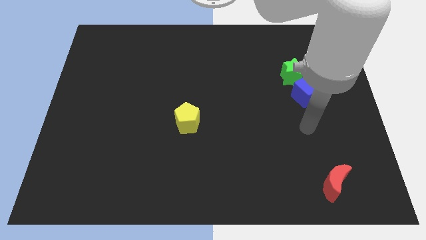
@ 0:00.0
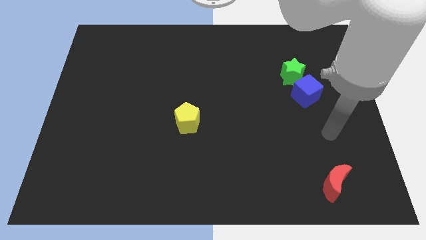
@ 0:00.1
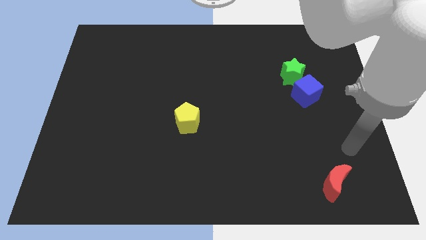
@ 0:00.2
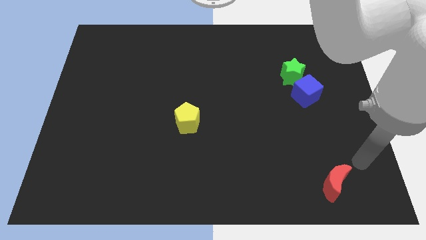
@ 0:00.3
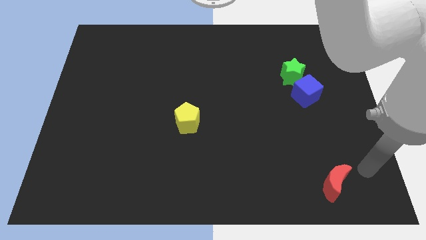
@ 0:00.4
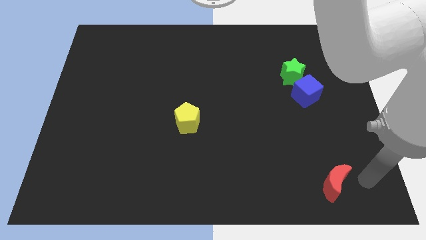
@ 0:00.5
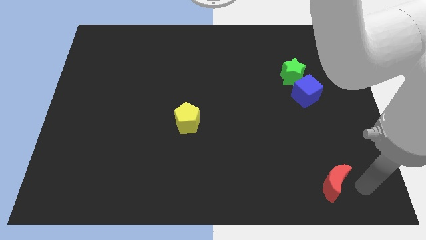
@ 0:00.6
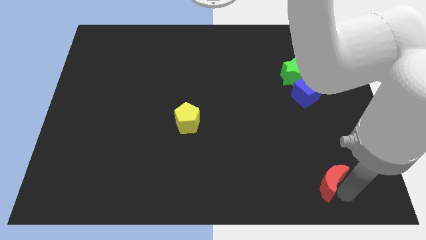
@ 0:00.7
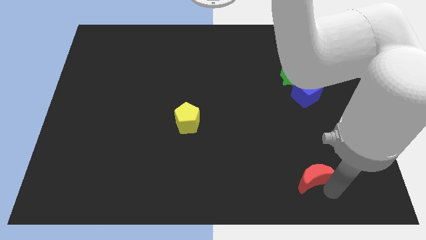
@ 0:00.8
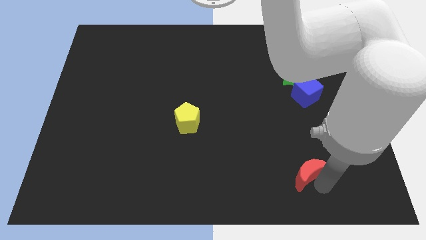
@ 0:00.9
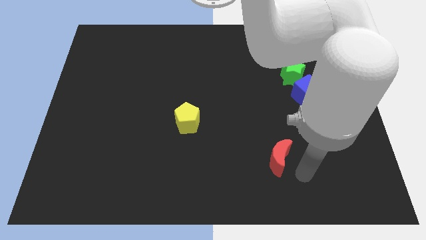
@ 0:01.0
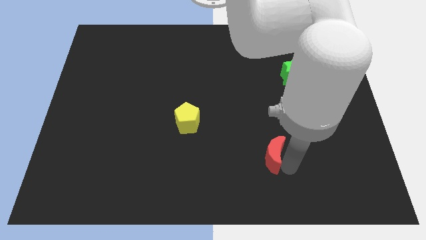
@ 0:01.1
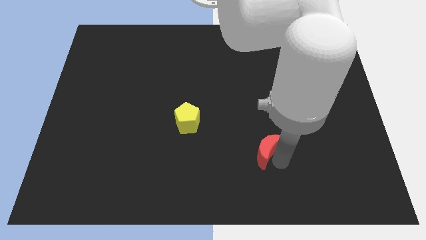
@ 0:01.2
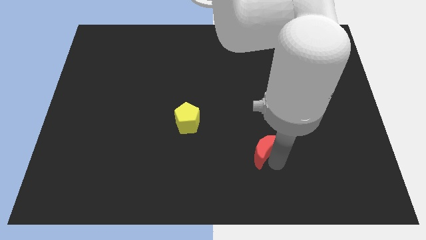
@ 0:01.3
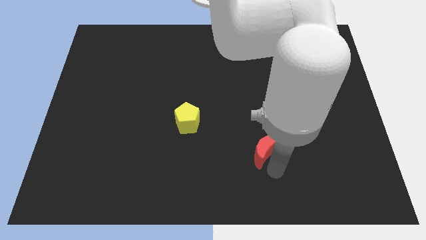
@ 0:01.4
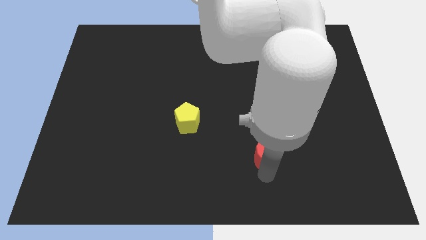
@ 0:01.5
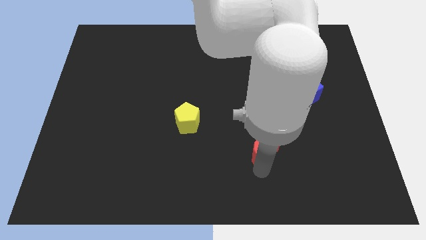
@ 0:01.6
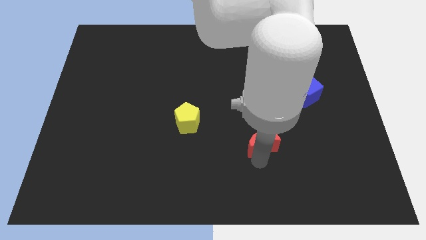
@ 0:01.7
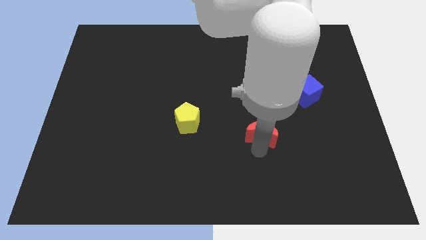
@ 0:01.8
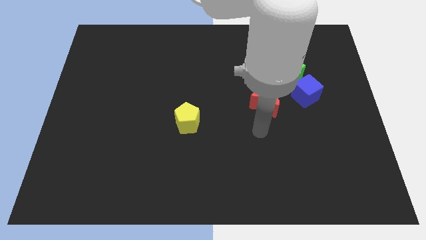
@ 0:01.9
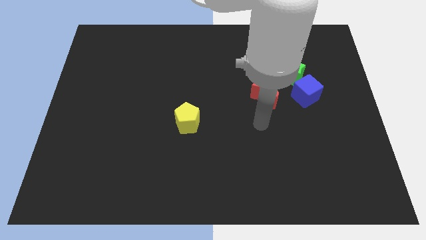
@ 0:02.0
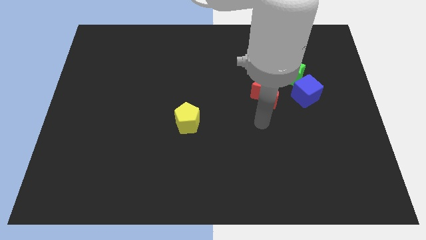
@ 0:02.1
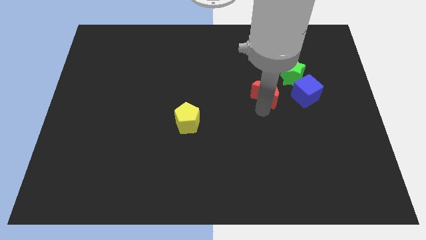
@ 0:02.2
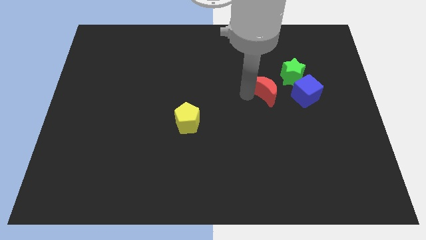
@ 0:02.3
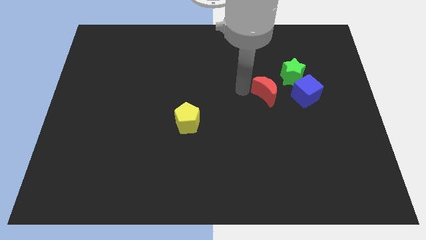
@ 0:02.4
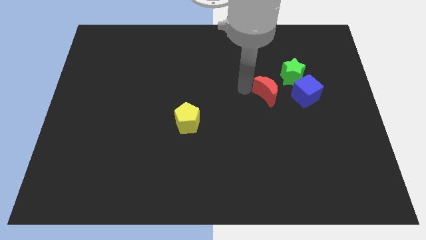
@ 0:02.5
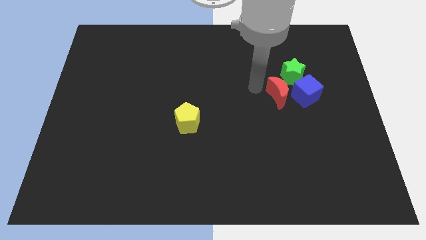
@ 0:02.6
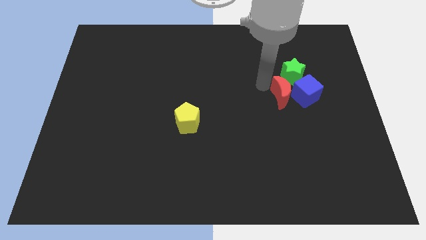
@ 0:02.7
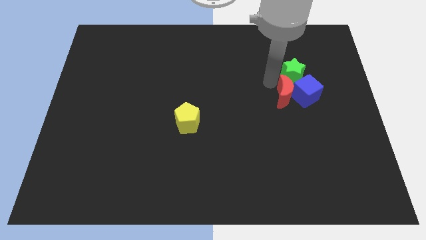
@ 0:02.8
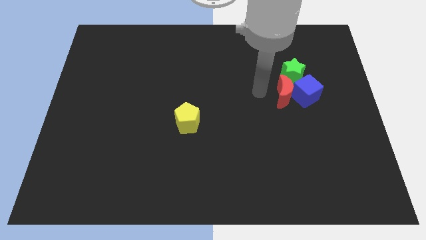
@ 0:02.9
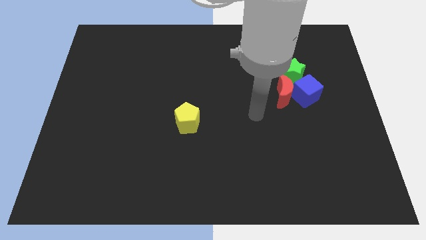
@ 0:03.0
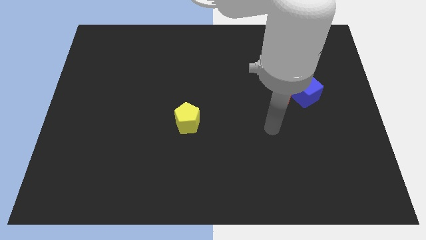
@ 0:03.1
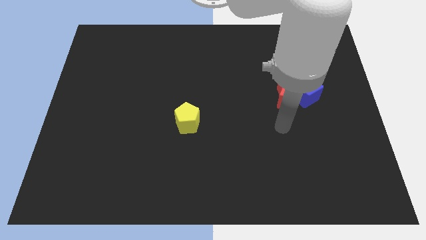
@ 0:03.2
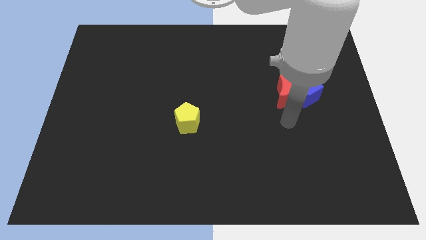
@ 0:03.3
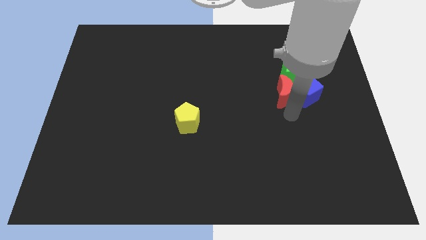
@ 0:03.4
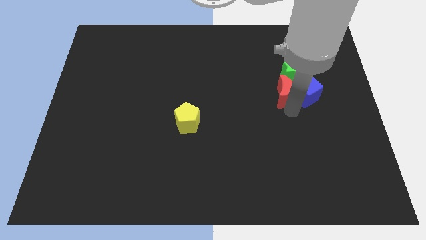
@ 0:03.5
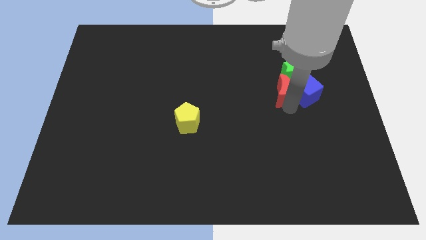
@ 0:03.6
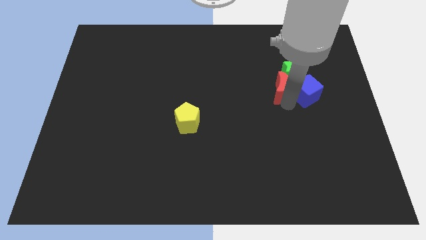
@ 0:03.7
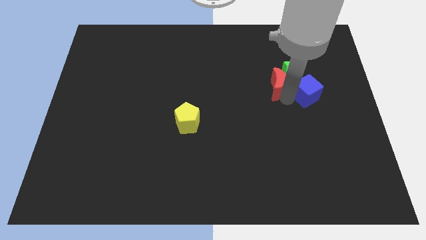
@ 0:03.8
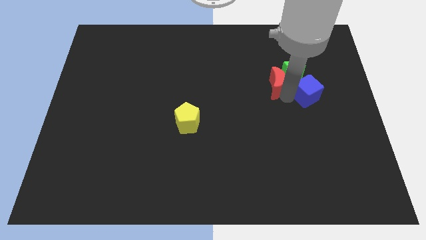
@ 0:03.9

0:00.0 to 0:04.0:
move the red block towards the green star

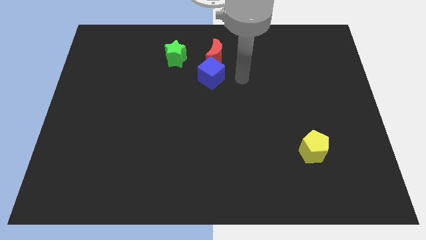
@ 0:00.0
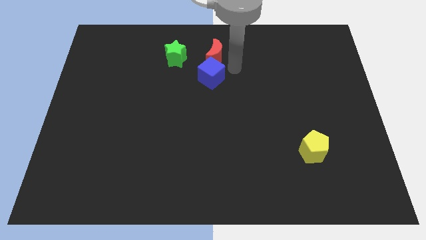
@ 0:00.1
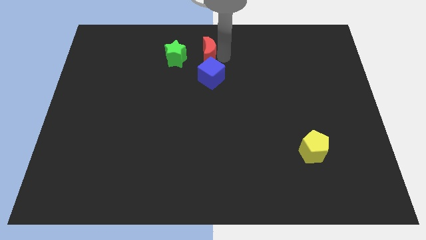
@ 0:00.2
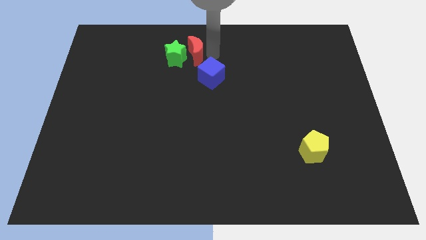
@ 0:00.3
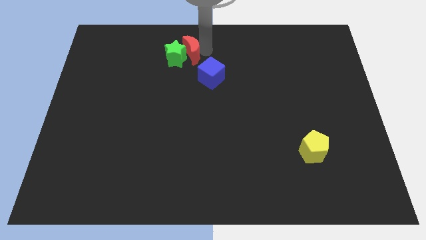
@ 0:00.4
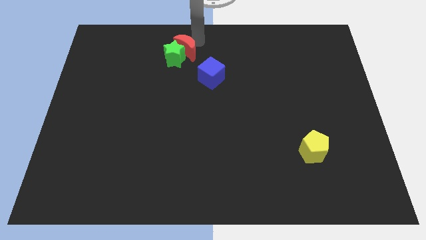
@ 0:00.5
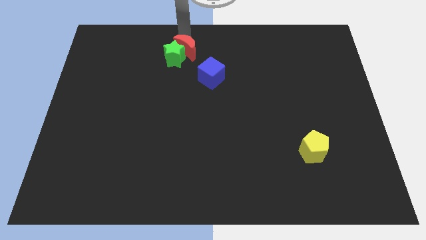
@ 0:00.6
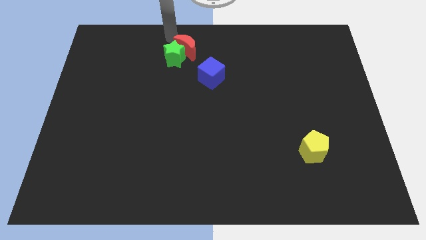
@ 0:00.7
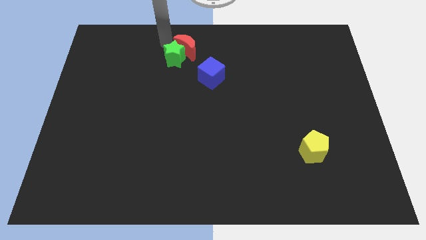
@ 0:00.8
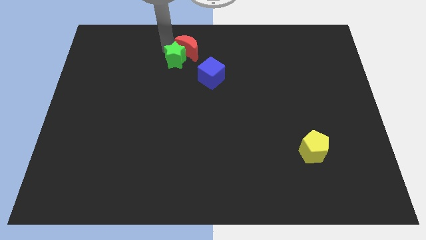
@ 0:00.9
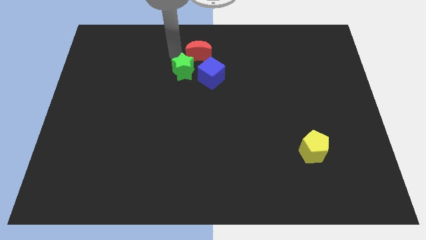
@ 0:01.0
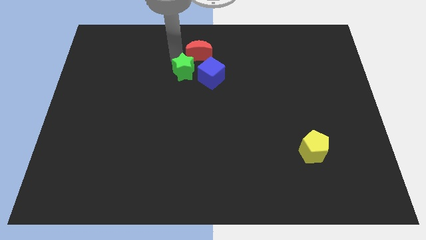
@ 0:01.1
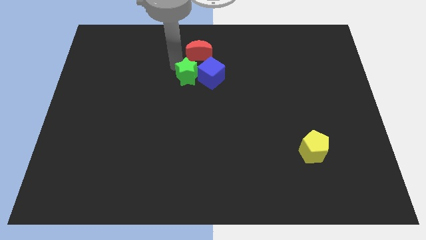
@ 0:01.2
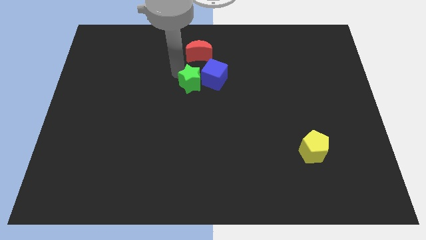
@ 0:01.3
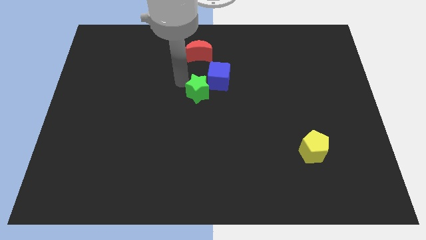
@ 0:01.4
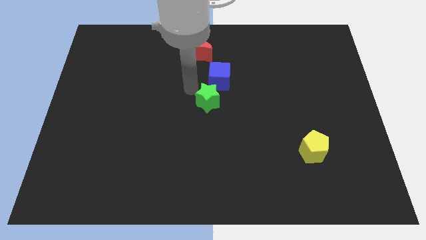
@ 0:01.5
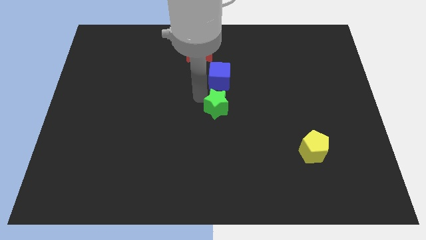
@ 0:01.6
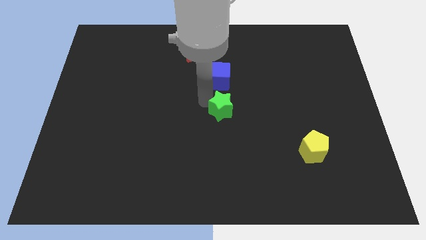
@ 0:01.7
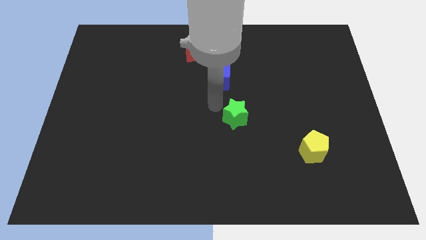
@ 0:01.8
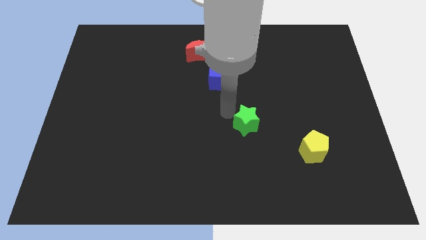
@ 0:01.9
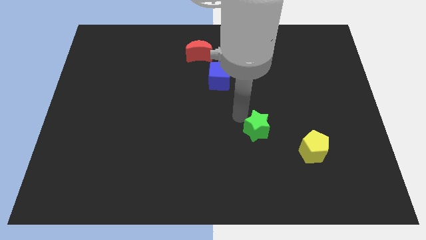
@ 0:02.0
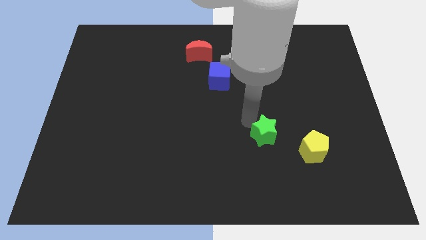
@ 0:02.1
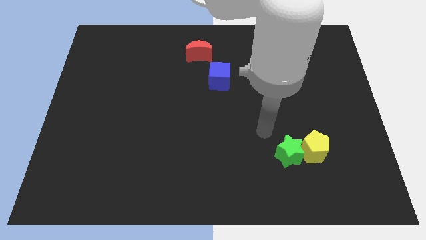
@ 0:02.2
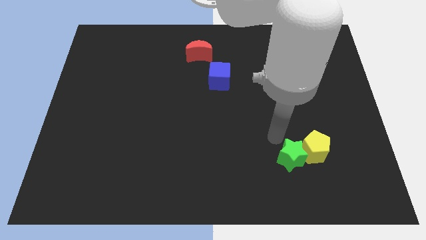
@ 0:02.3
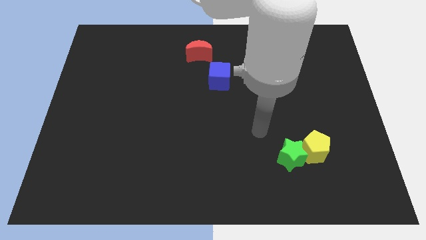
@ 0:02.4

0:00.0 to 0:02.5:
move the star to the yellow block

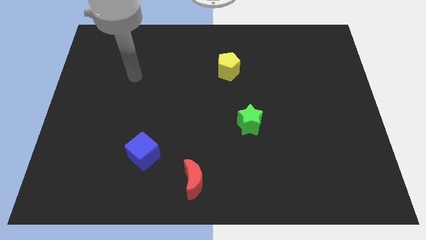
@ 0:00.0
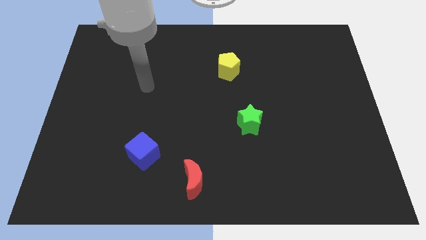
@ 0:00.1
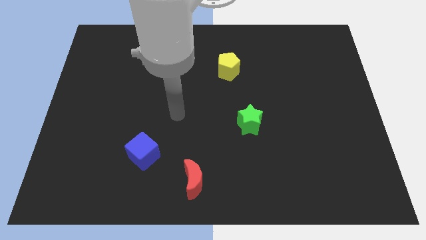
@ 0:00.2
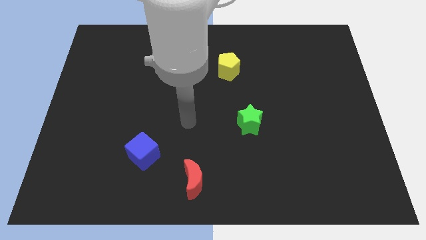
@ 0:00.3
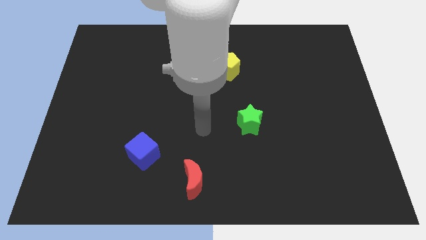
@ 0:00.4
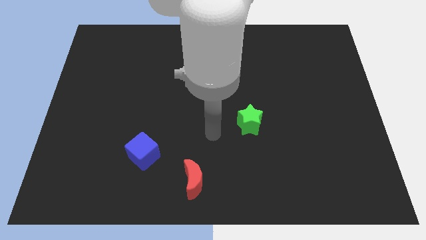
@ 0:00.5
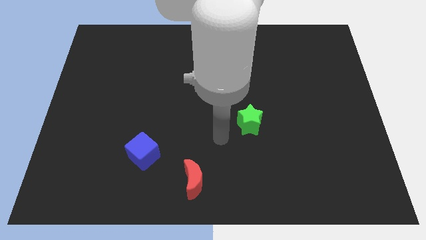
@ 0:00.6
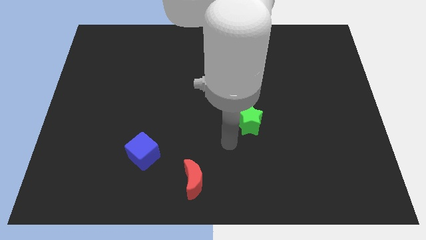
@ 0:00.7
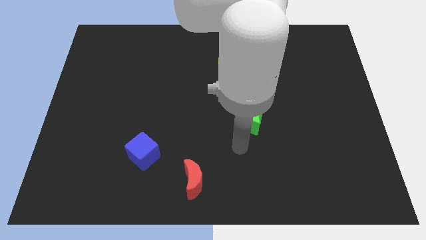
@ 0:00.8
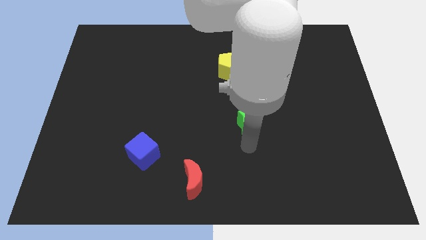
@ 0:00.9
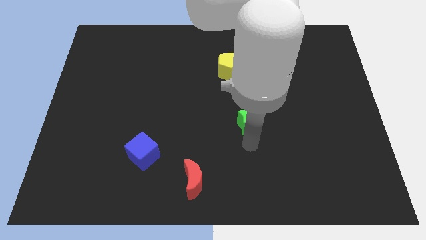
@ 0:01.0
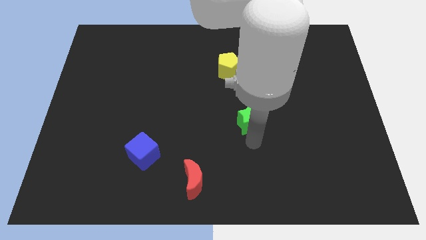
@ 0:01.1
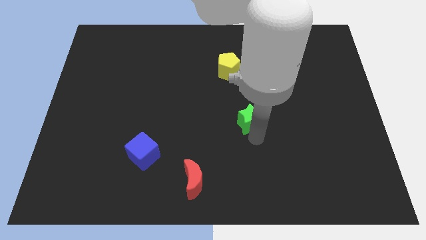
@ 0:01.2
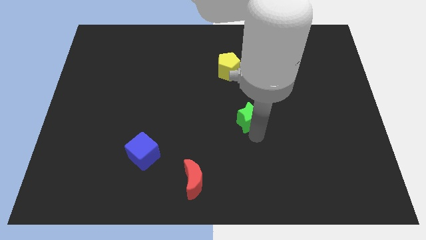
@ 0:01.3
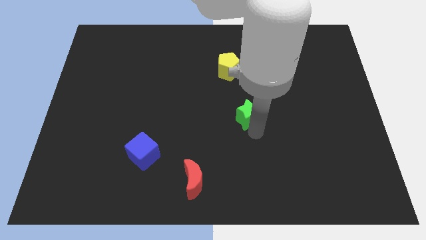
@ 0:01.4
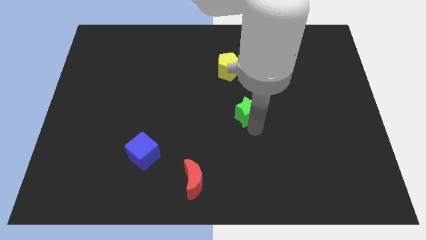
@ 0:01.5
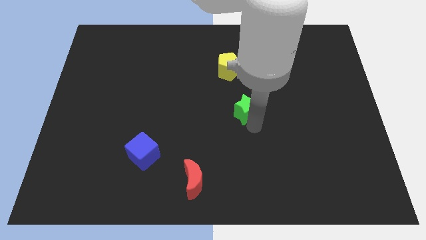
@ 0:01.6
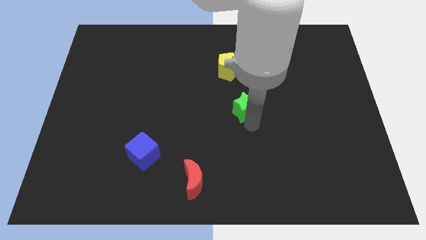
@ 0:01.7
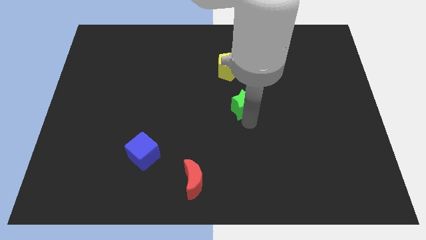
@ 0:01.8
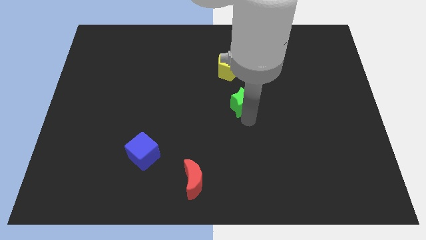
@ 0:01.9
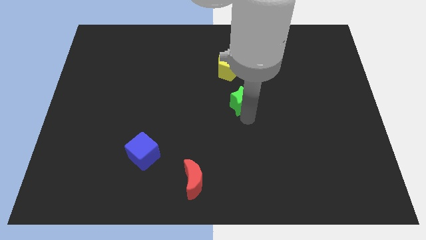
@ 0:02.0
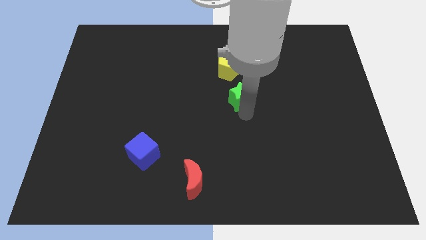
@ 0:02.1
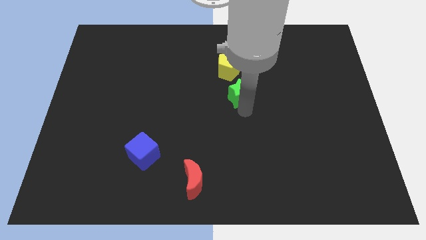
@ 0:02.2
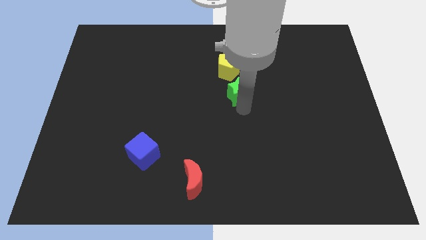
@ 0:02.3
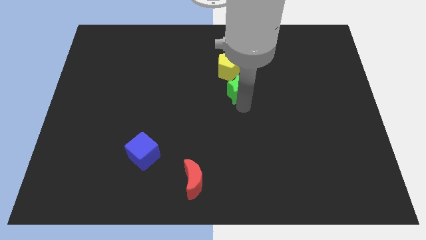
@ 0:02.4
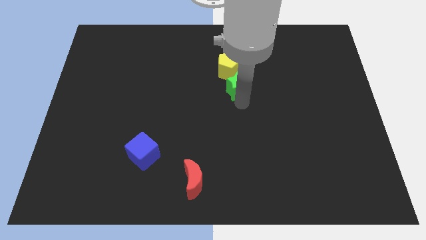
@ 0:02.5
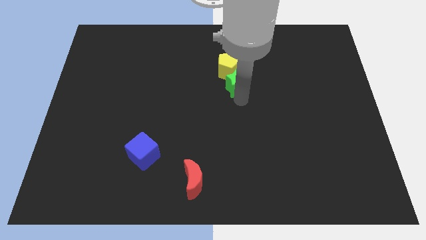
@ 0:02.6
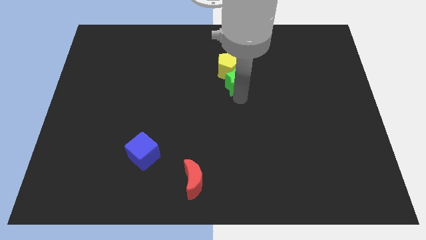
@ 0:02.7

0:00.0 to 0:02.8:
put the green block to the pentagon
